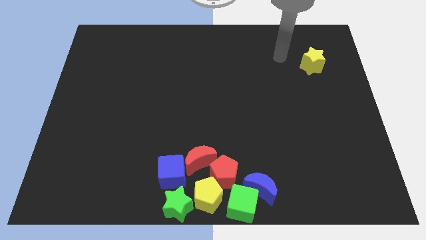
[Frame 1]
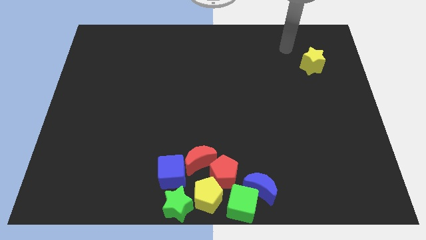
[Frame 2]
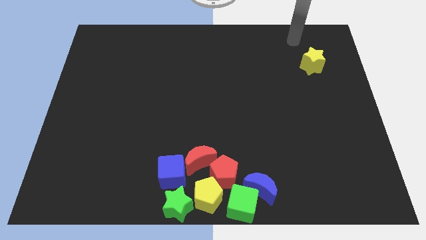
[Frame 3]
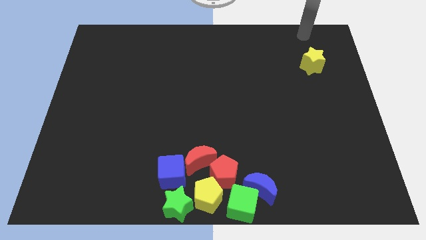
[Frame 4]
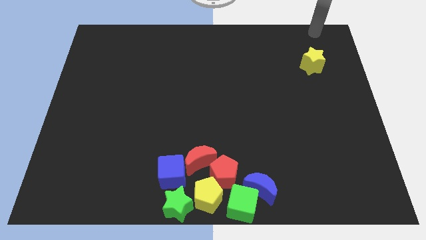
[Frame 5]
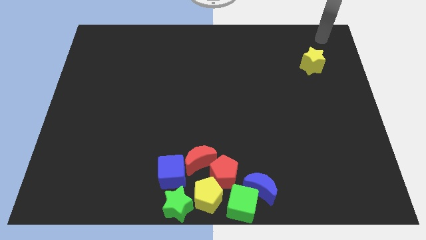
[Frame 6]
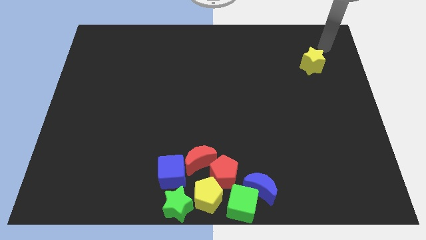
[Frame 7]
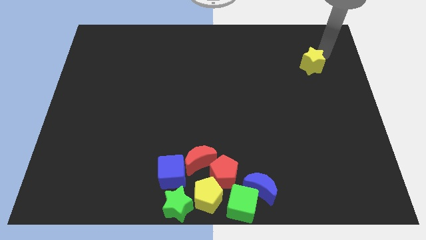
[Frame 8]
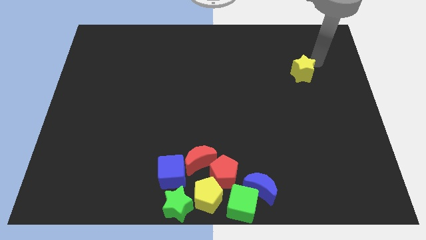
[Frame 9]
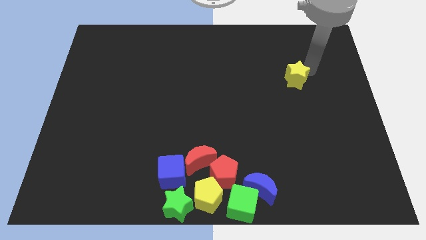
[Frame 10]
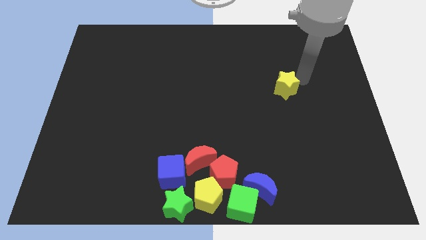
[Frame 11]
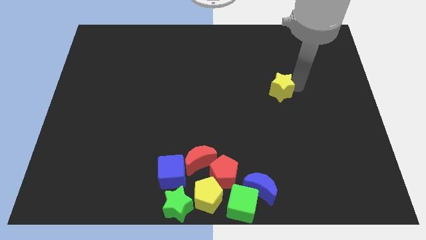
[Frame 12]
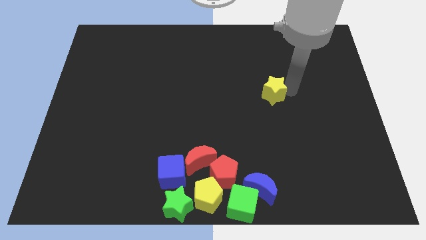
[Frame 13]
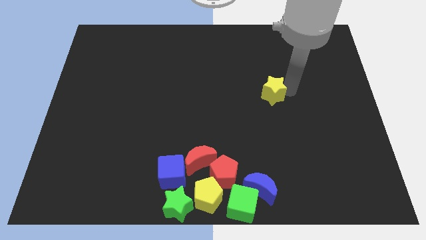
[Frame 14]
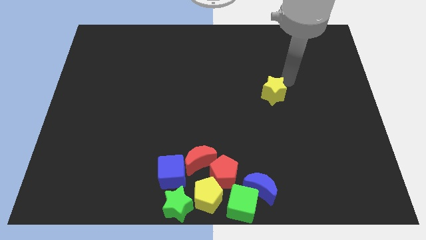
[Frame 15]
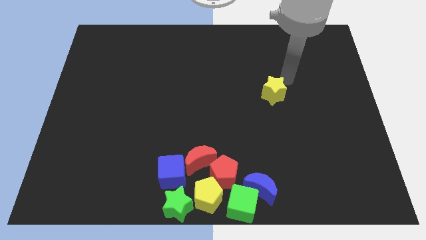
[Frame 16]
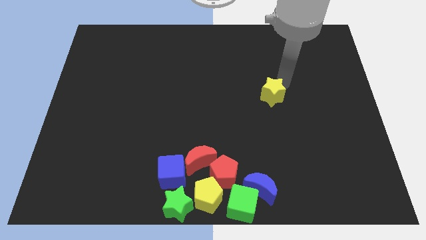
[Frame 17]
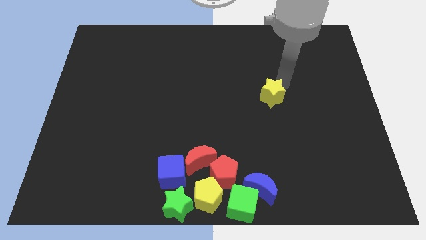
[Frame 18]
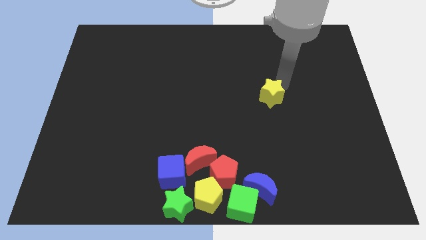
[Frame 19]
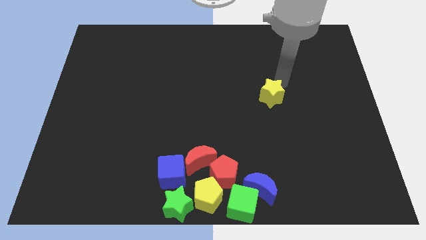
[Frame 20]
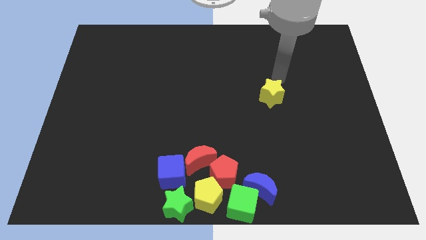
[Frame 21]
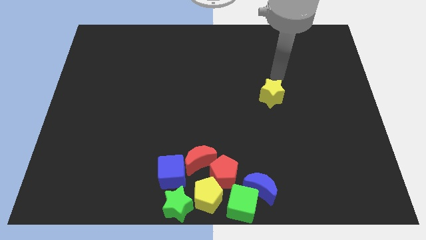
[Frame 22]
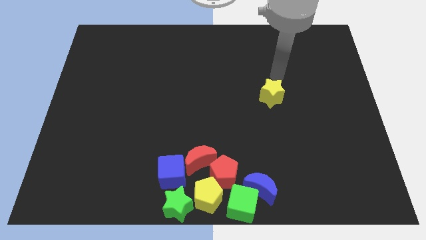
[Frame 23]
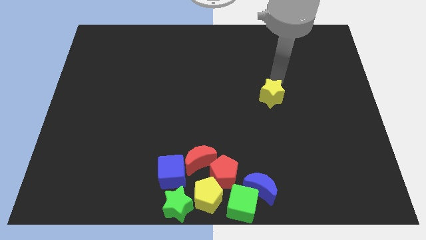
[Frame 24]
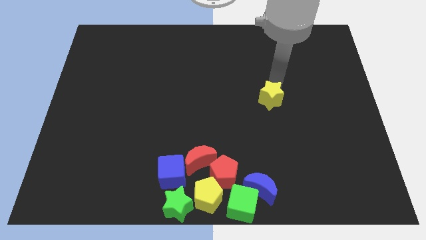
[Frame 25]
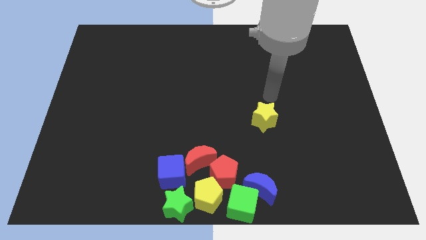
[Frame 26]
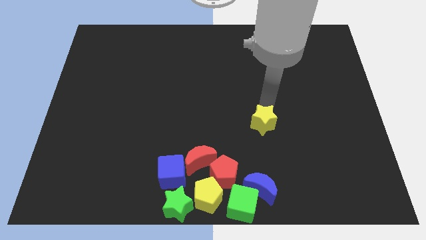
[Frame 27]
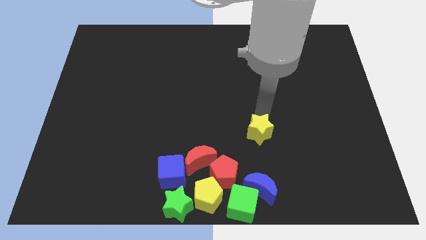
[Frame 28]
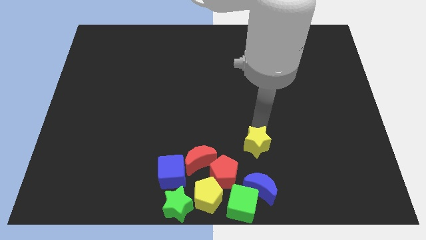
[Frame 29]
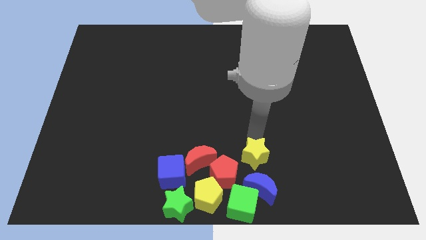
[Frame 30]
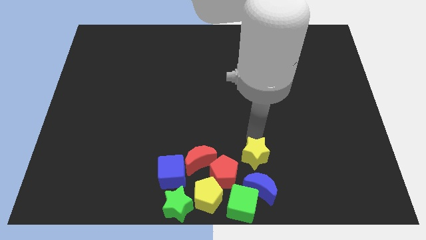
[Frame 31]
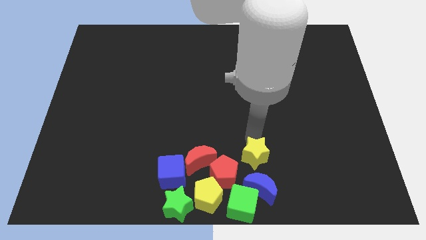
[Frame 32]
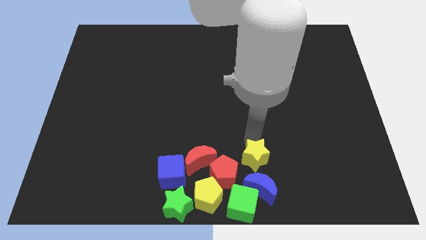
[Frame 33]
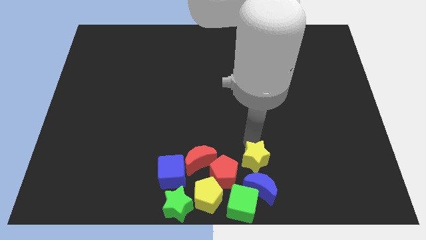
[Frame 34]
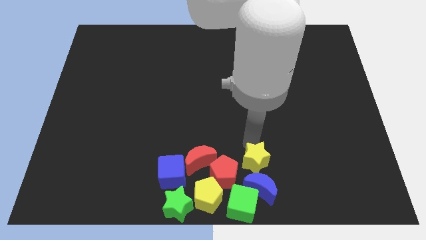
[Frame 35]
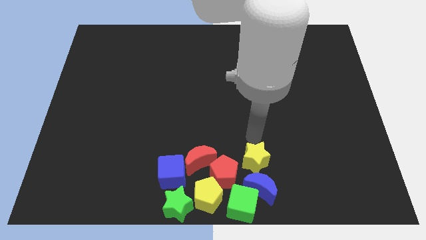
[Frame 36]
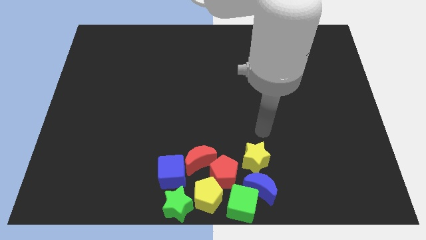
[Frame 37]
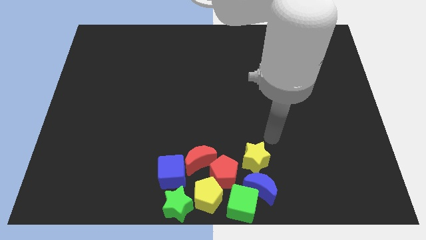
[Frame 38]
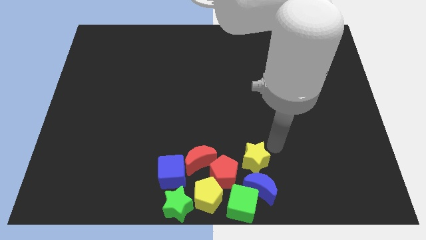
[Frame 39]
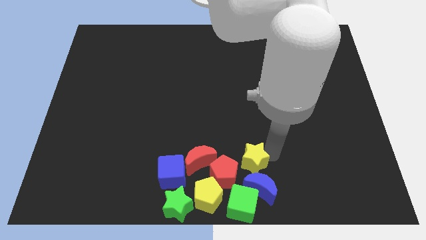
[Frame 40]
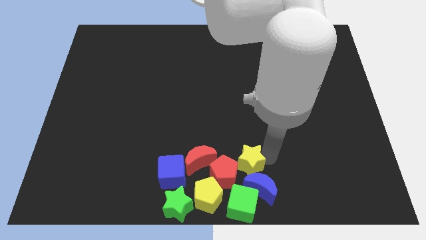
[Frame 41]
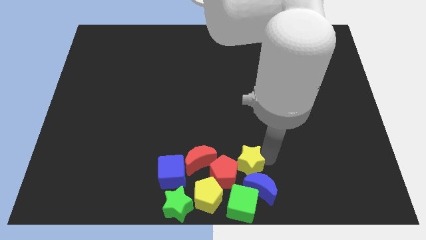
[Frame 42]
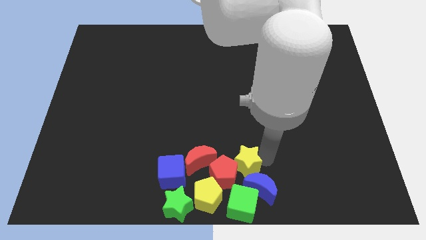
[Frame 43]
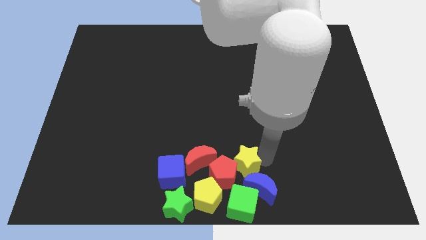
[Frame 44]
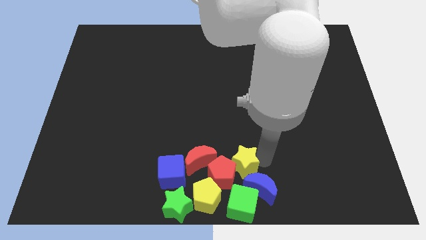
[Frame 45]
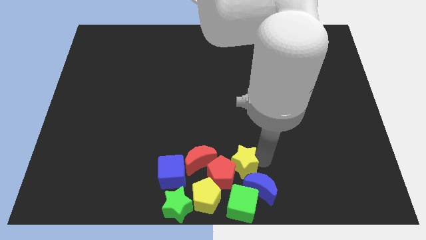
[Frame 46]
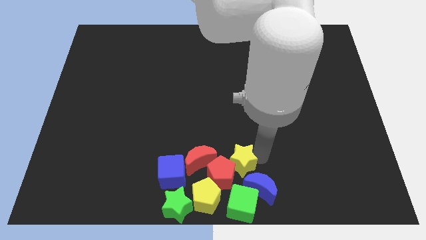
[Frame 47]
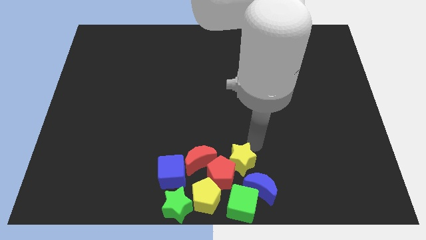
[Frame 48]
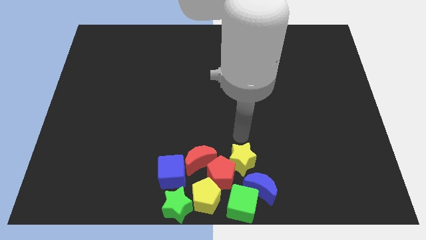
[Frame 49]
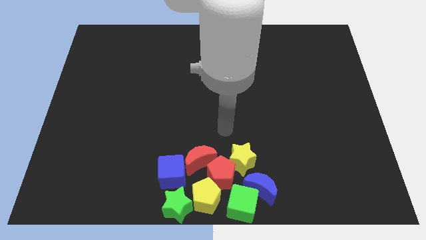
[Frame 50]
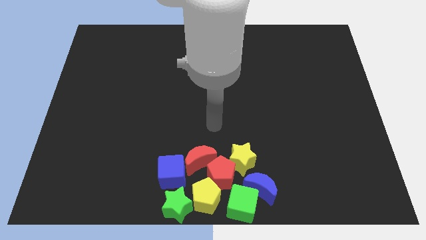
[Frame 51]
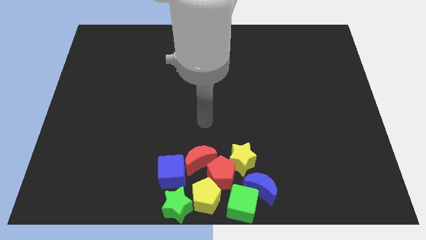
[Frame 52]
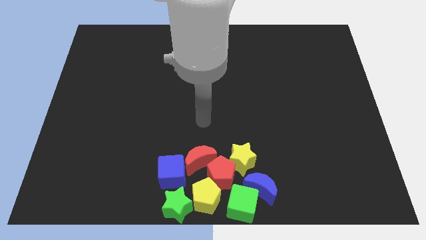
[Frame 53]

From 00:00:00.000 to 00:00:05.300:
slide the yellow star into the red pentagon

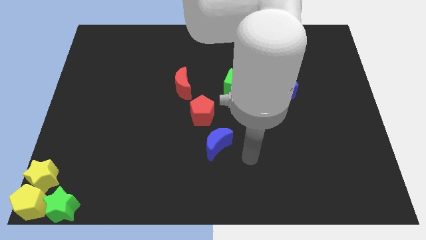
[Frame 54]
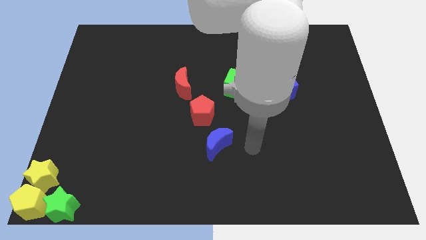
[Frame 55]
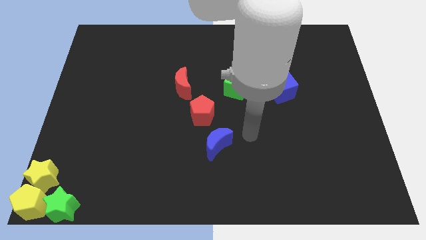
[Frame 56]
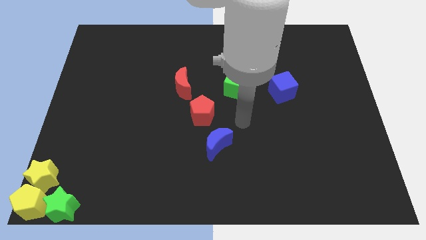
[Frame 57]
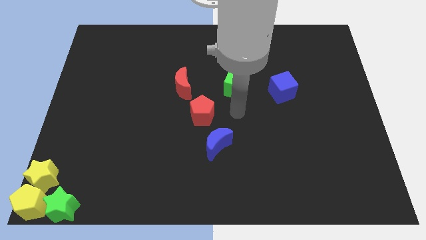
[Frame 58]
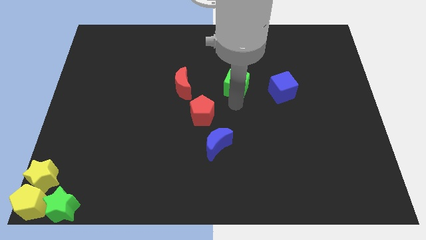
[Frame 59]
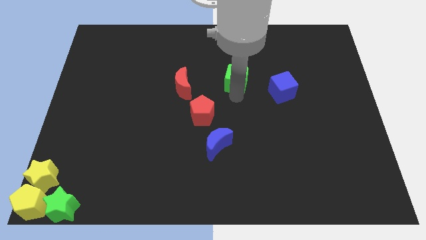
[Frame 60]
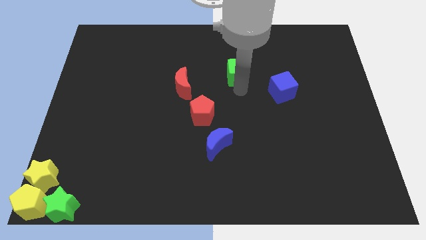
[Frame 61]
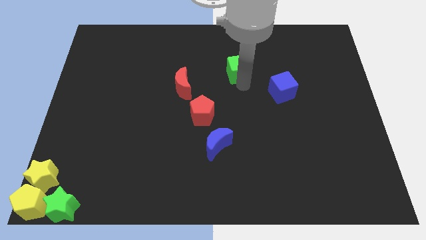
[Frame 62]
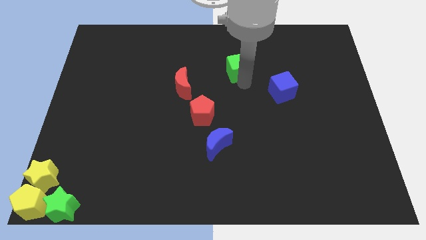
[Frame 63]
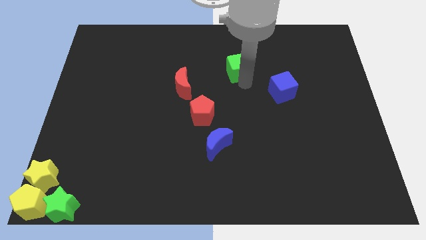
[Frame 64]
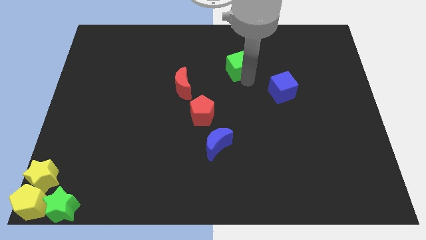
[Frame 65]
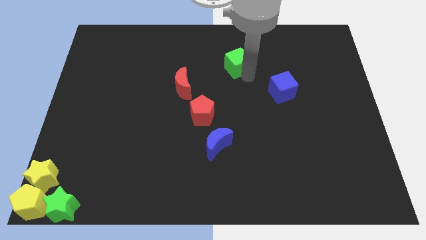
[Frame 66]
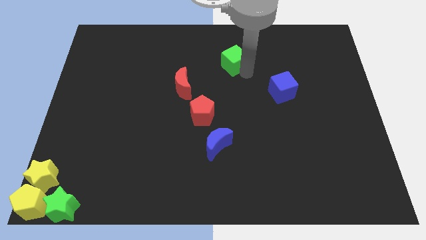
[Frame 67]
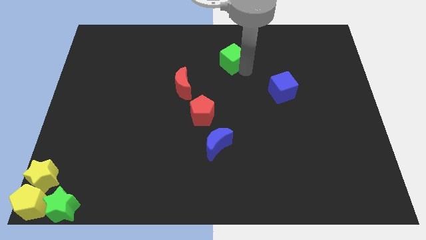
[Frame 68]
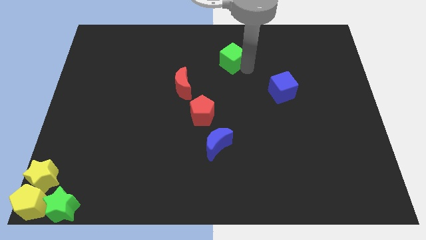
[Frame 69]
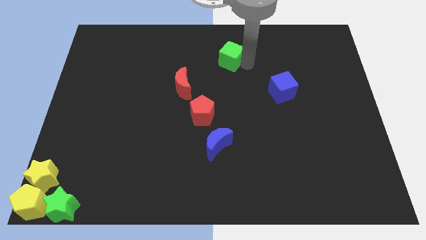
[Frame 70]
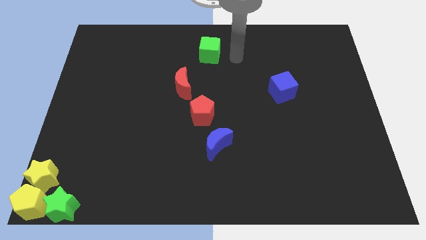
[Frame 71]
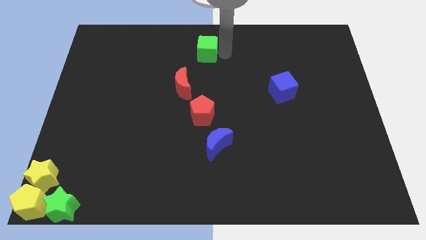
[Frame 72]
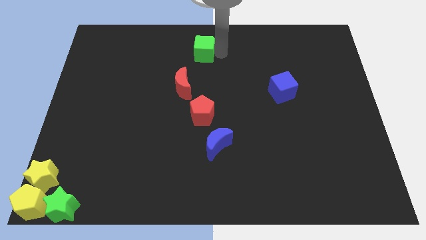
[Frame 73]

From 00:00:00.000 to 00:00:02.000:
push the green cube towards the top center

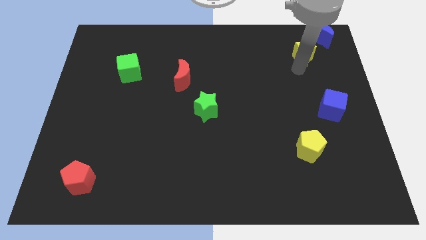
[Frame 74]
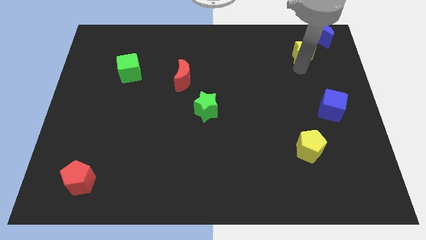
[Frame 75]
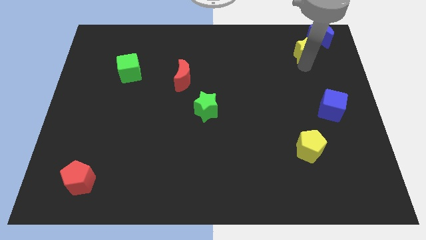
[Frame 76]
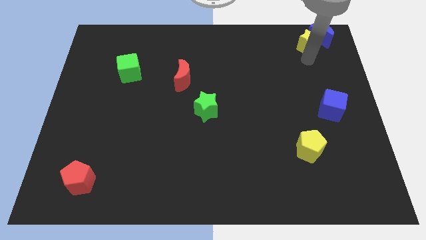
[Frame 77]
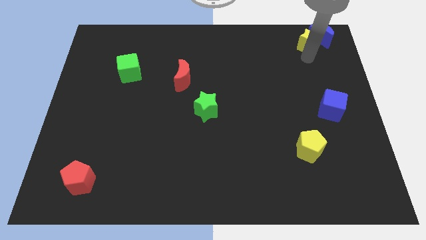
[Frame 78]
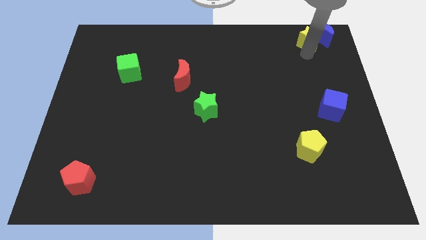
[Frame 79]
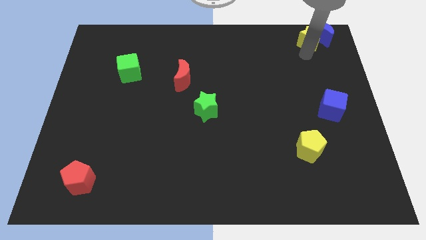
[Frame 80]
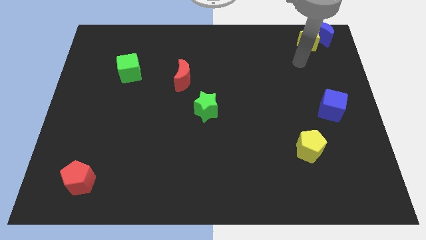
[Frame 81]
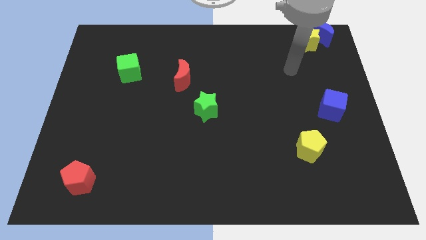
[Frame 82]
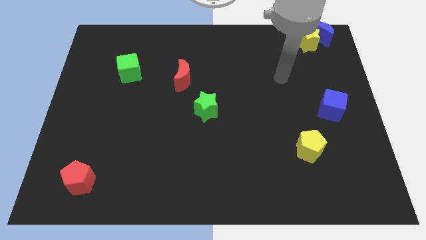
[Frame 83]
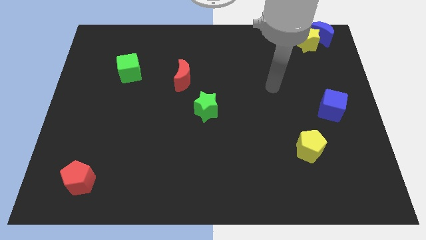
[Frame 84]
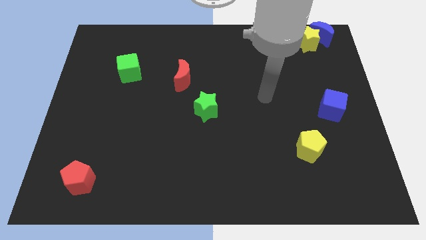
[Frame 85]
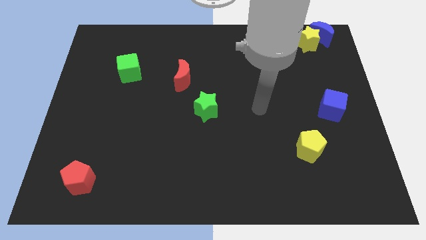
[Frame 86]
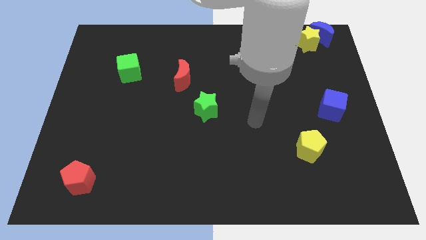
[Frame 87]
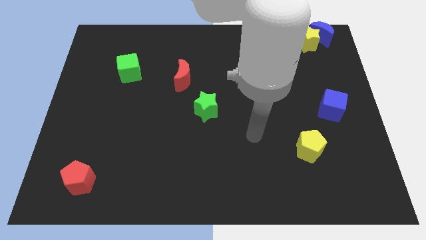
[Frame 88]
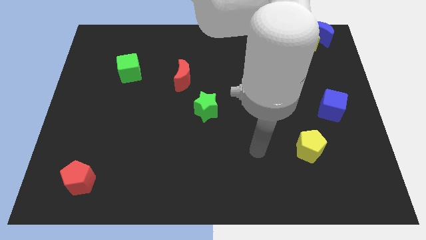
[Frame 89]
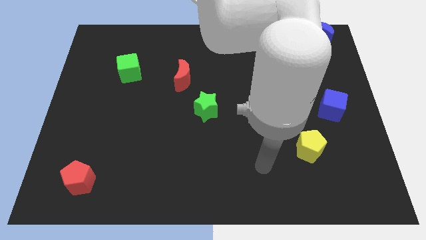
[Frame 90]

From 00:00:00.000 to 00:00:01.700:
push the yellow star into blue moon
